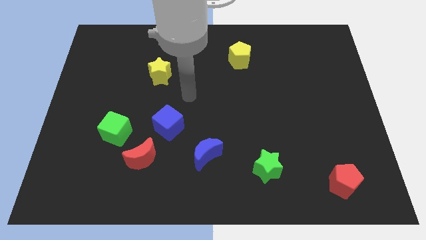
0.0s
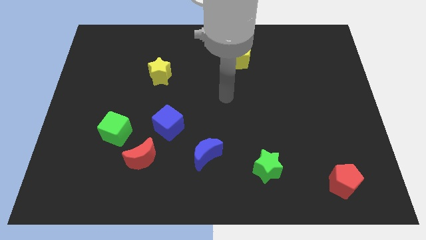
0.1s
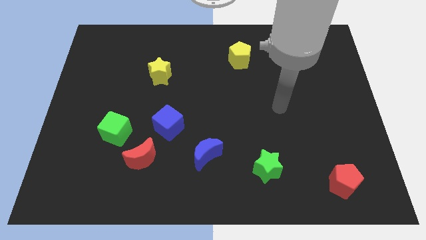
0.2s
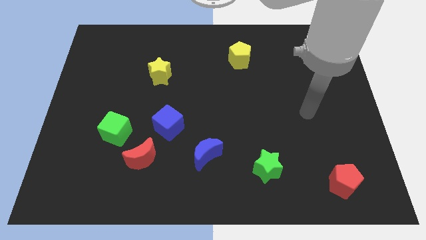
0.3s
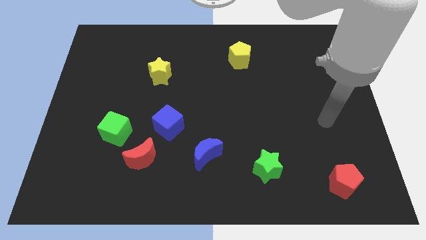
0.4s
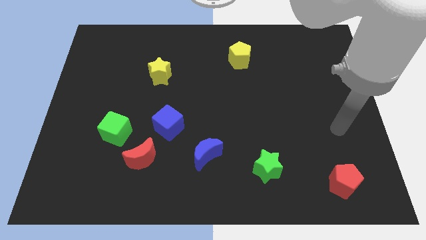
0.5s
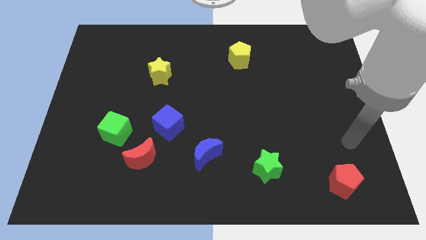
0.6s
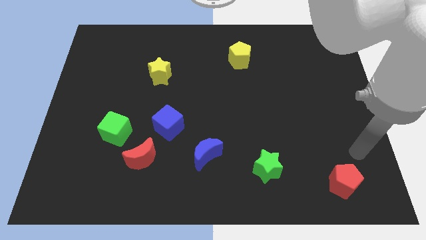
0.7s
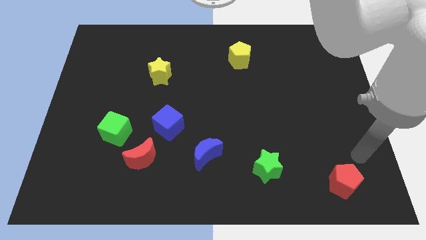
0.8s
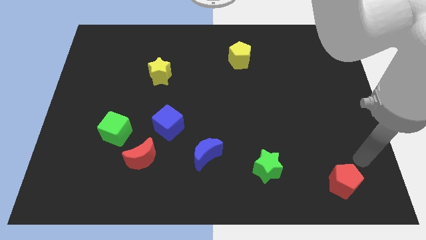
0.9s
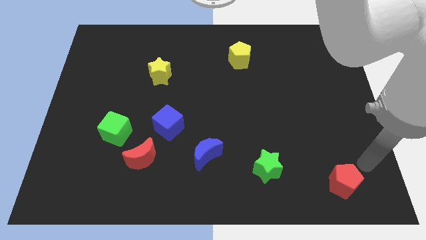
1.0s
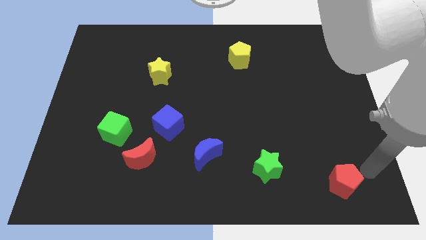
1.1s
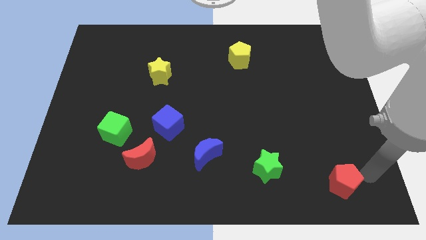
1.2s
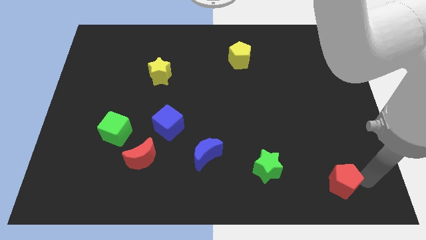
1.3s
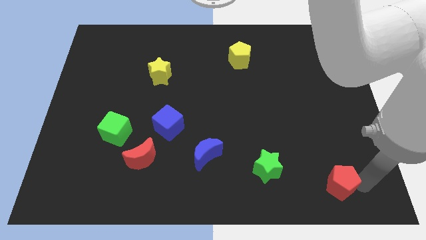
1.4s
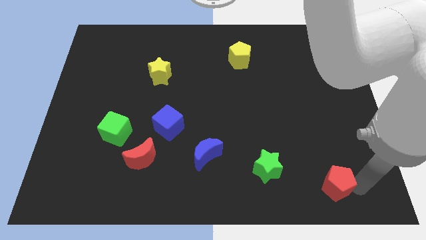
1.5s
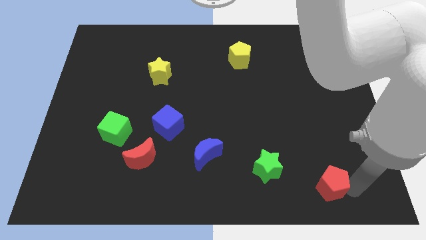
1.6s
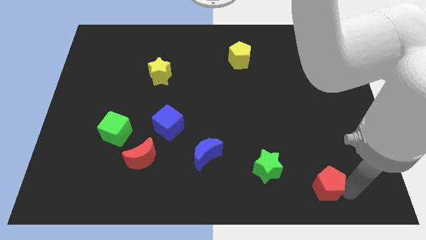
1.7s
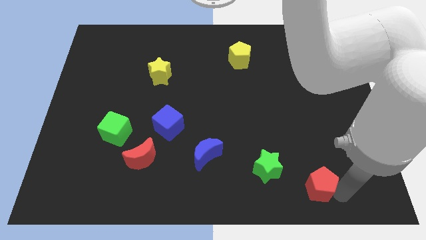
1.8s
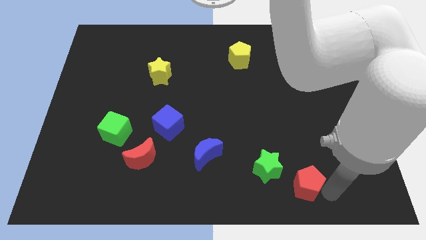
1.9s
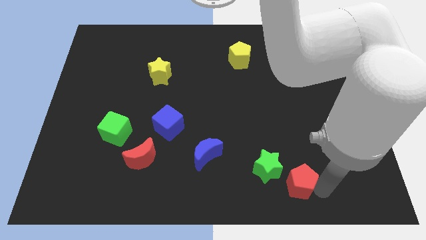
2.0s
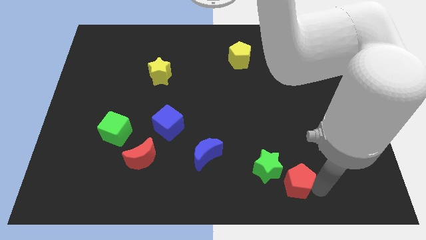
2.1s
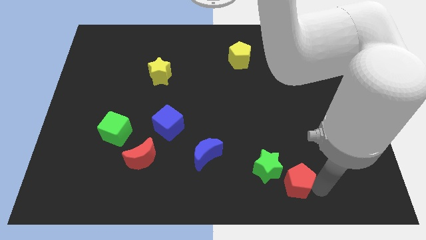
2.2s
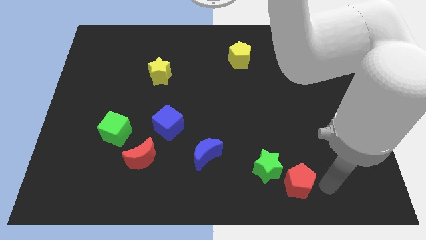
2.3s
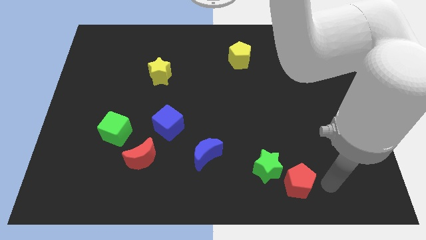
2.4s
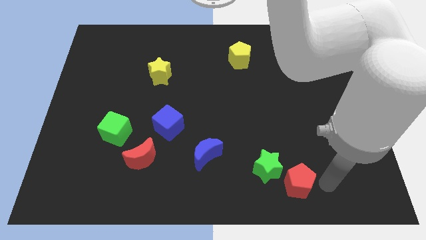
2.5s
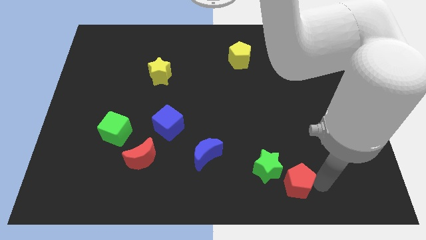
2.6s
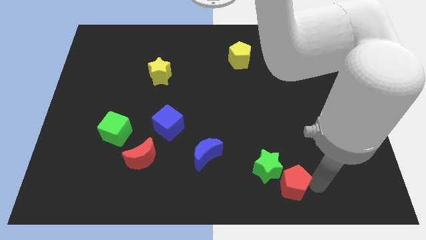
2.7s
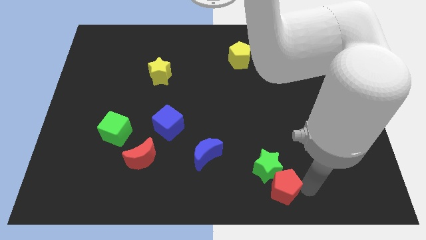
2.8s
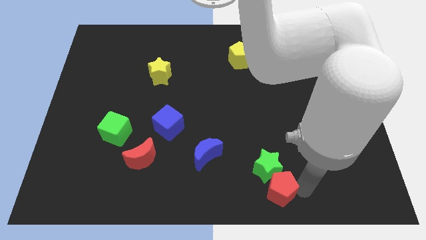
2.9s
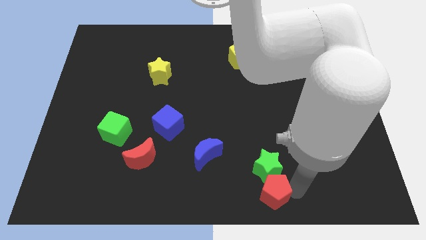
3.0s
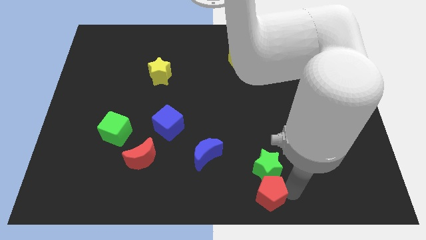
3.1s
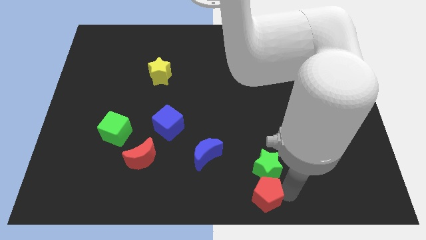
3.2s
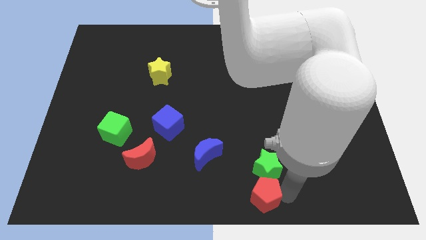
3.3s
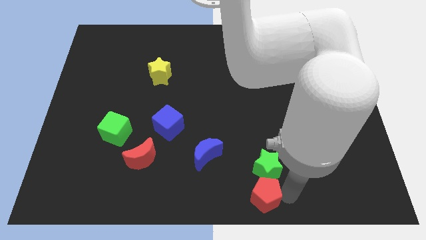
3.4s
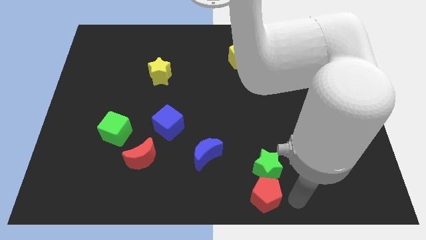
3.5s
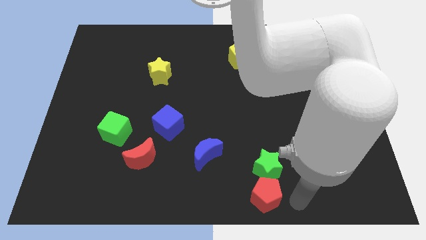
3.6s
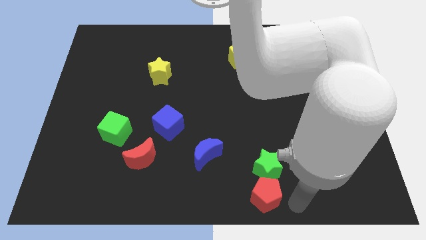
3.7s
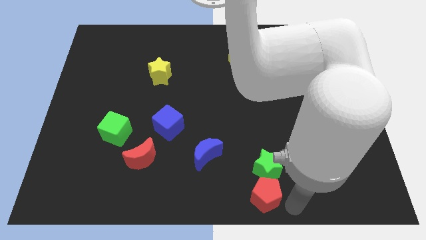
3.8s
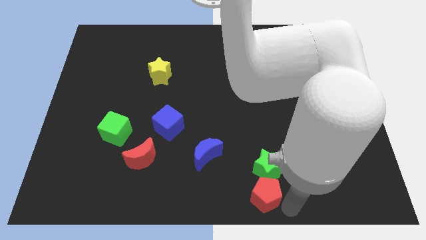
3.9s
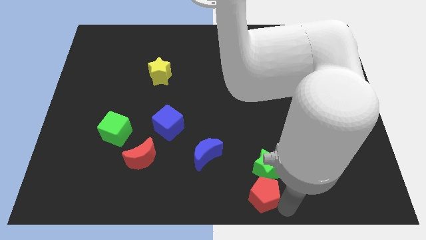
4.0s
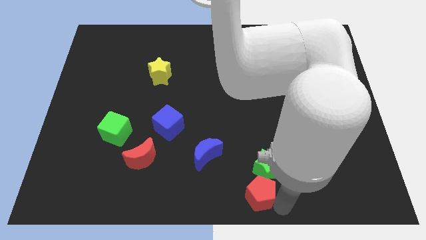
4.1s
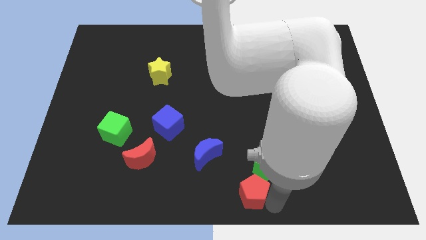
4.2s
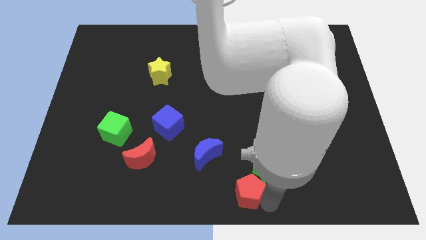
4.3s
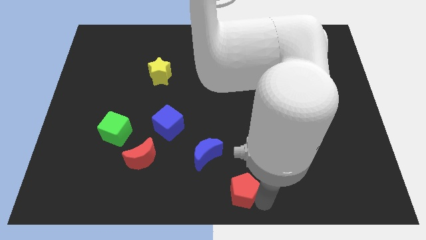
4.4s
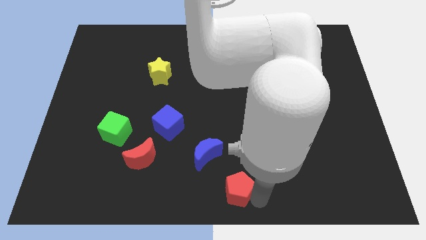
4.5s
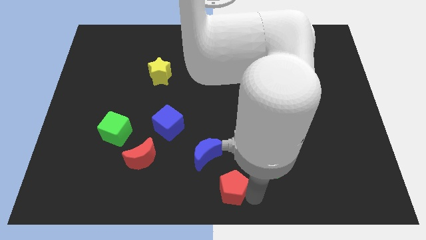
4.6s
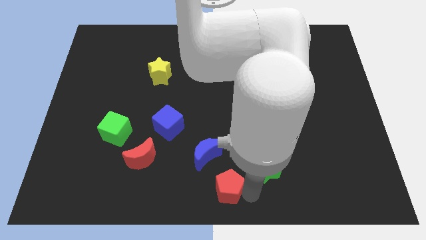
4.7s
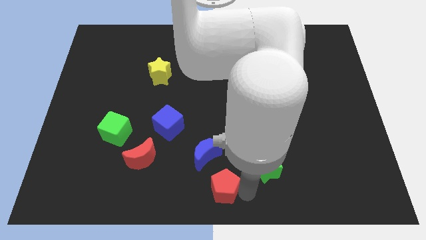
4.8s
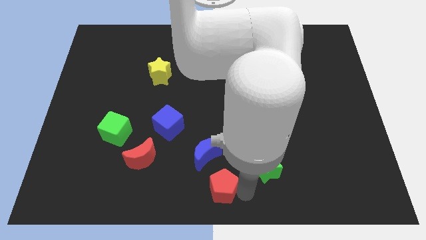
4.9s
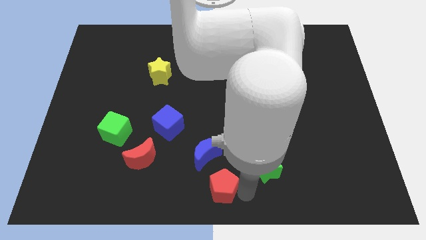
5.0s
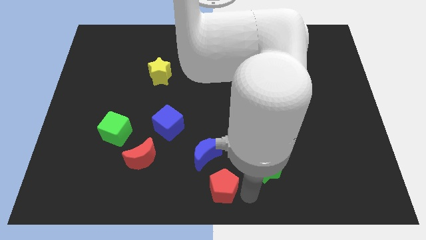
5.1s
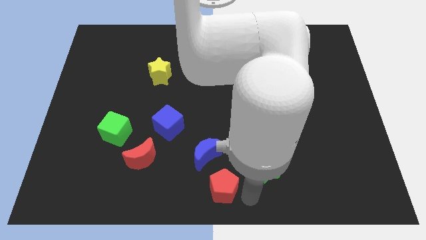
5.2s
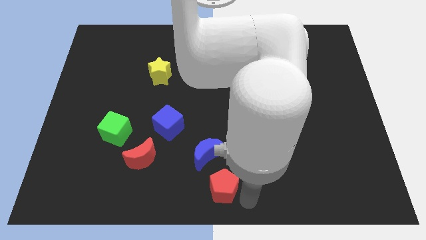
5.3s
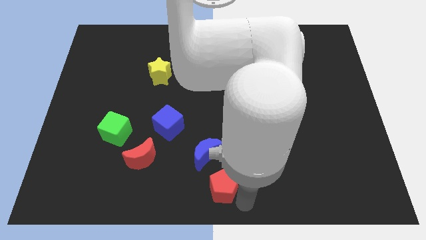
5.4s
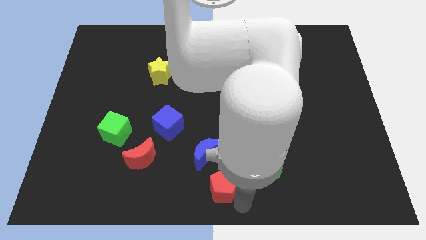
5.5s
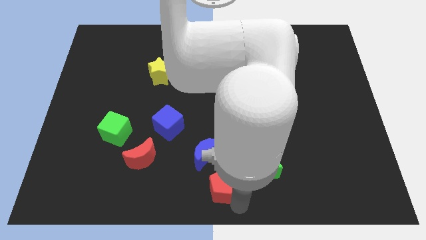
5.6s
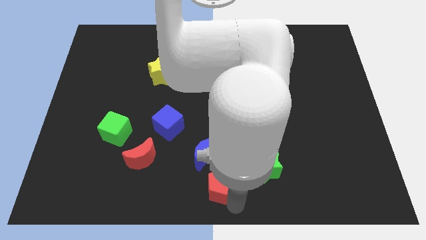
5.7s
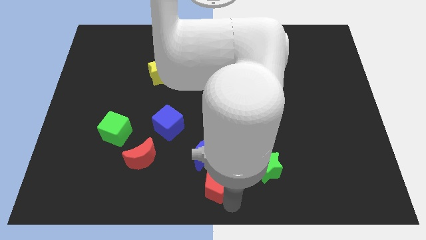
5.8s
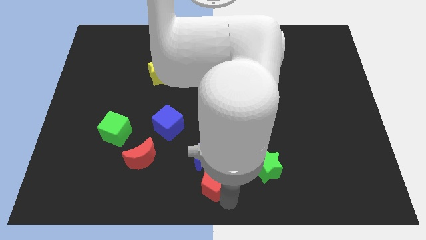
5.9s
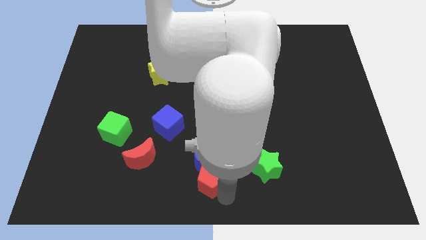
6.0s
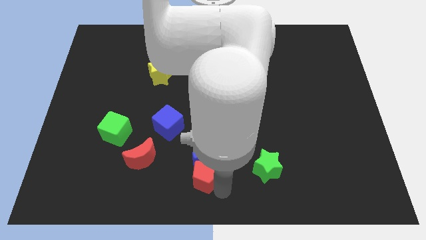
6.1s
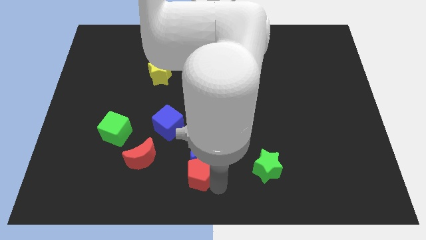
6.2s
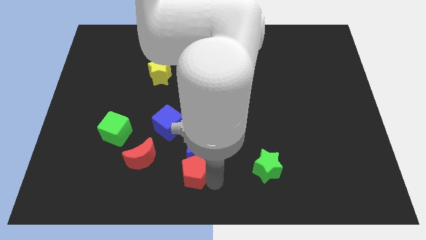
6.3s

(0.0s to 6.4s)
put the red pentagon to the blue moon

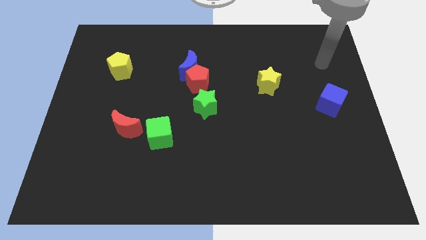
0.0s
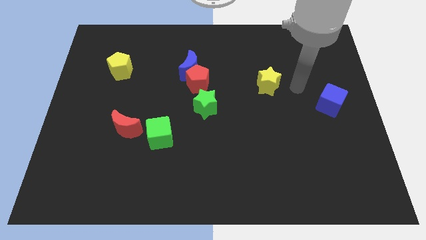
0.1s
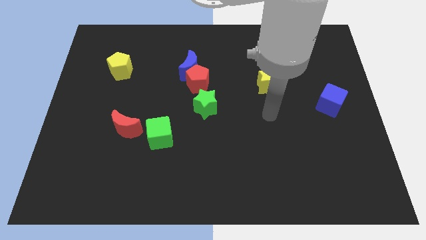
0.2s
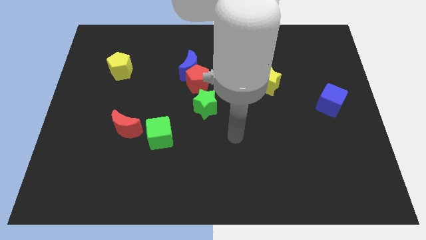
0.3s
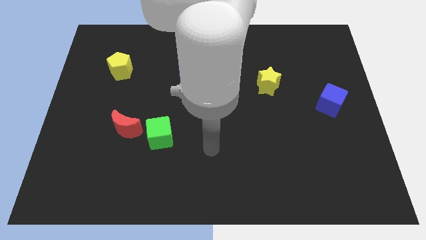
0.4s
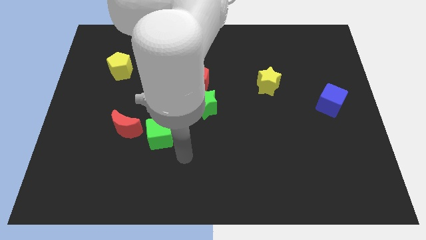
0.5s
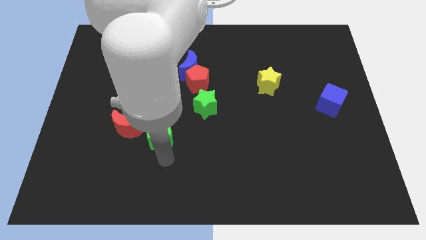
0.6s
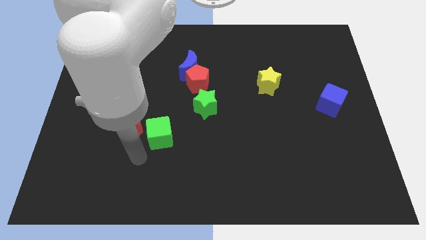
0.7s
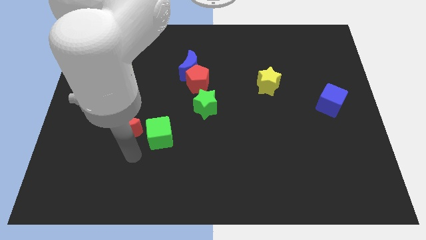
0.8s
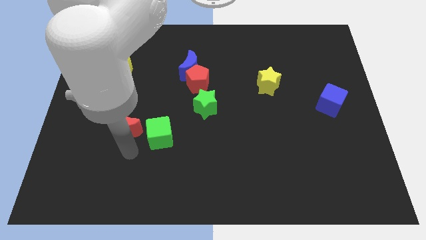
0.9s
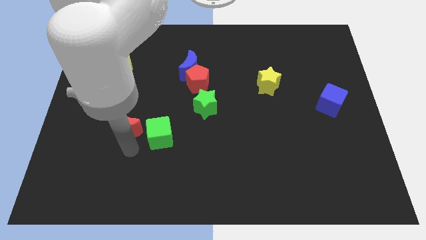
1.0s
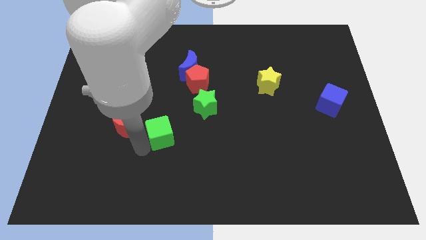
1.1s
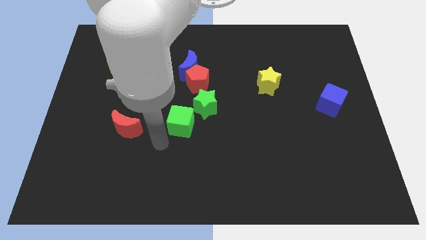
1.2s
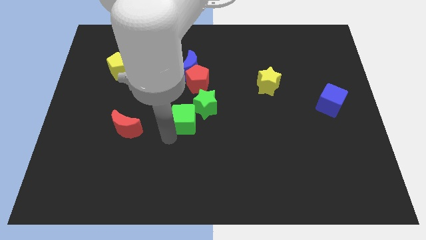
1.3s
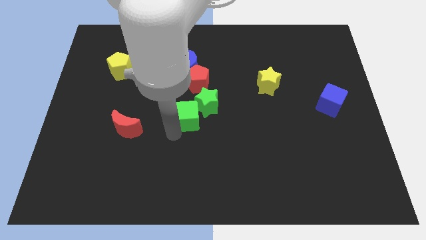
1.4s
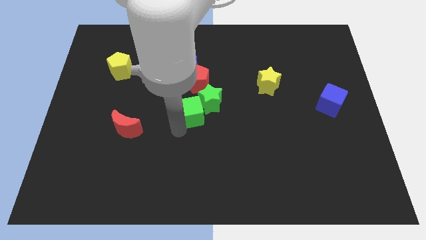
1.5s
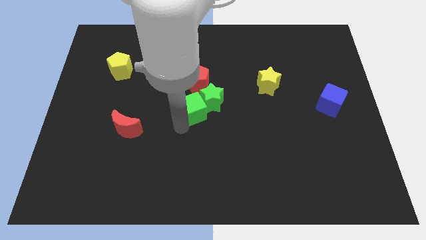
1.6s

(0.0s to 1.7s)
push the green cube close to the green star

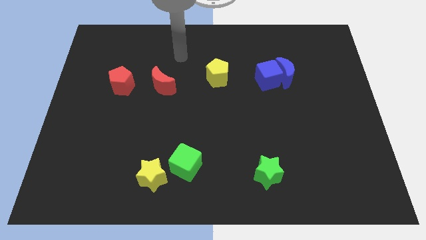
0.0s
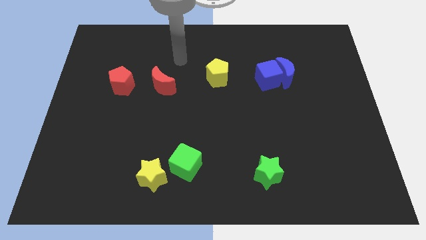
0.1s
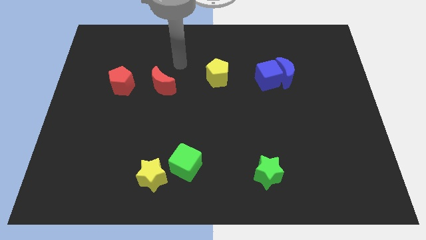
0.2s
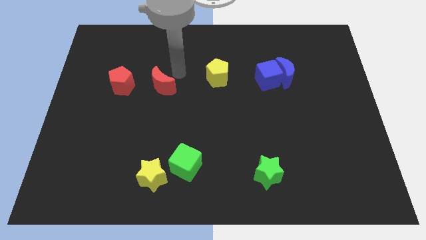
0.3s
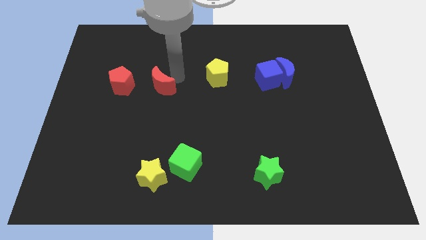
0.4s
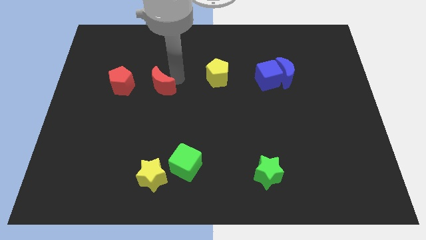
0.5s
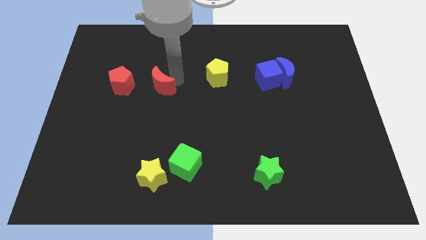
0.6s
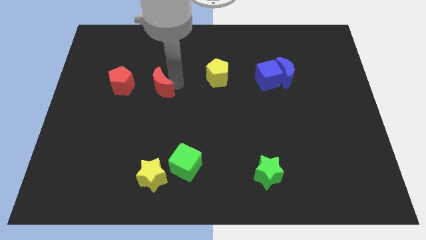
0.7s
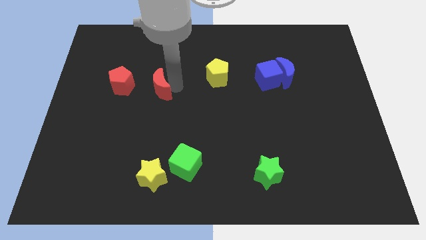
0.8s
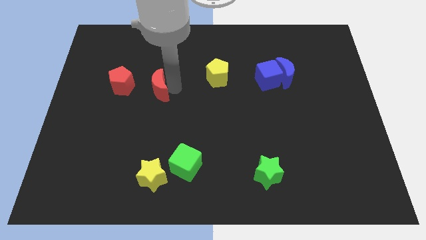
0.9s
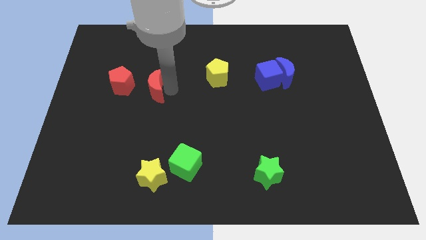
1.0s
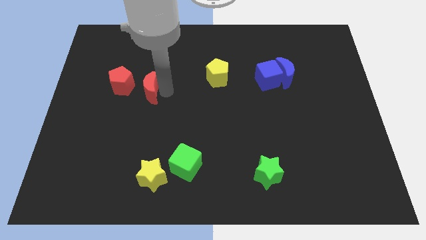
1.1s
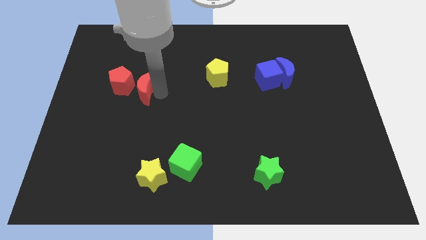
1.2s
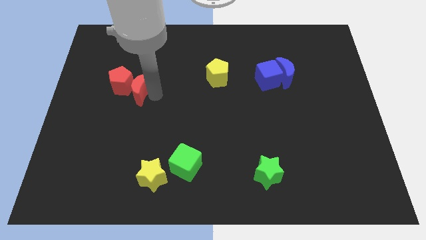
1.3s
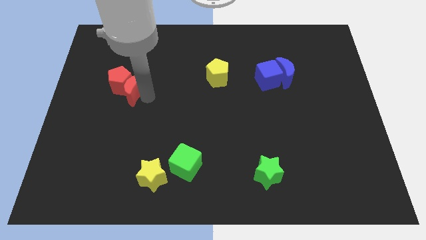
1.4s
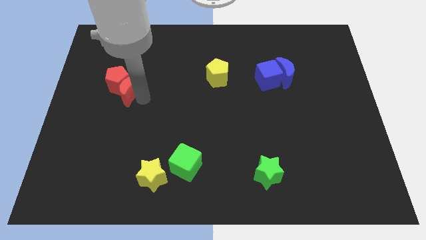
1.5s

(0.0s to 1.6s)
slide the red moon to the red pentagon
